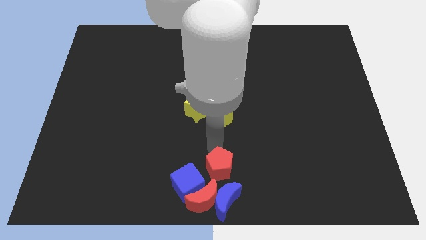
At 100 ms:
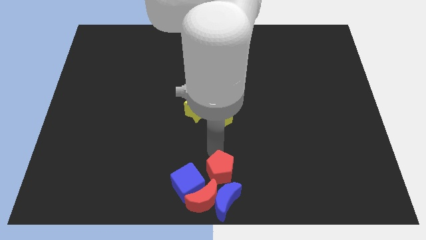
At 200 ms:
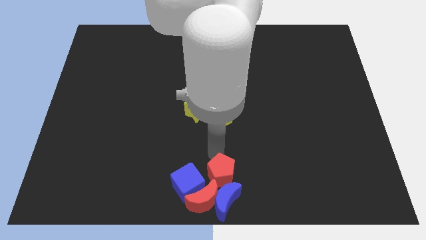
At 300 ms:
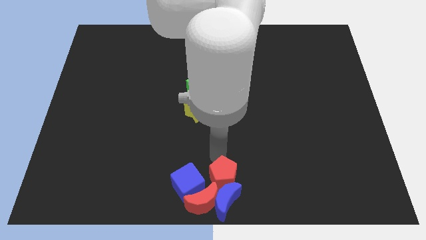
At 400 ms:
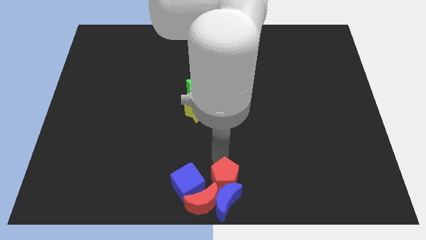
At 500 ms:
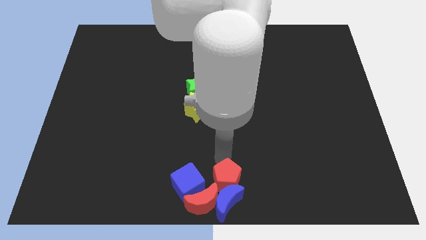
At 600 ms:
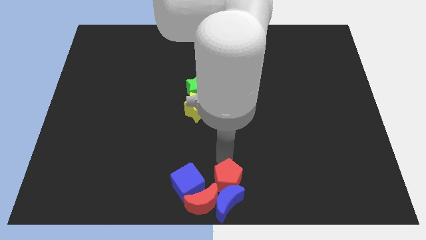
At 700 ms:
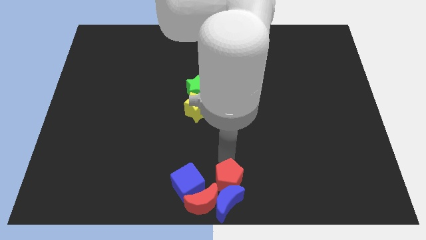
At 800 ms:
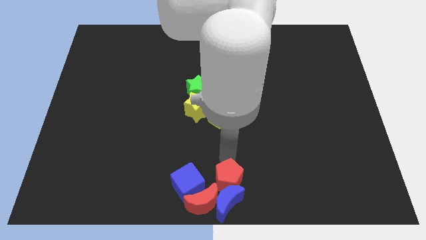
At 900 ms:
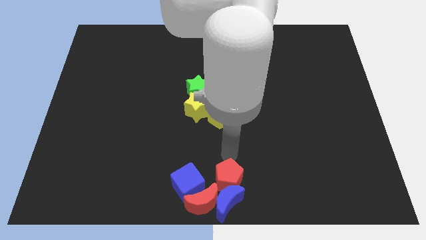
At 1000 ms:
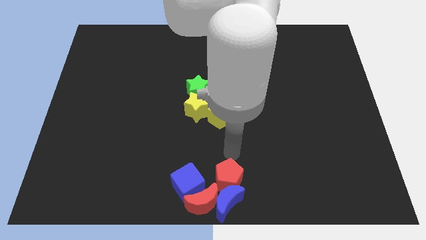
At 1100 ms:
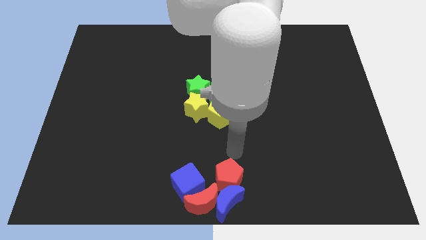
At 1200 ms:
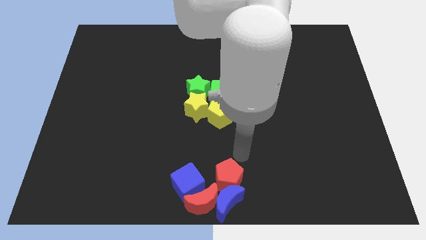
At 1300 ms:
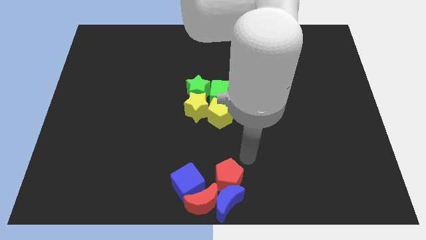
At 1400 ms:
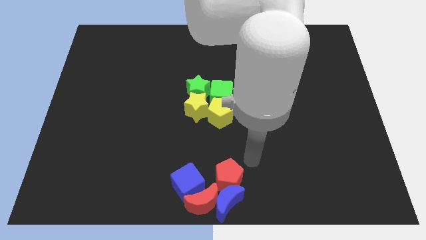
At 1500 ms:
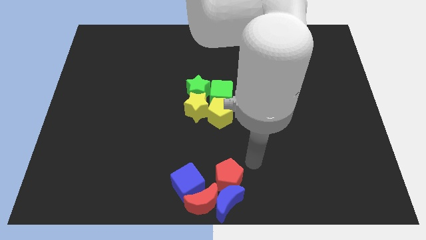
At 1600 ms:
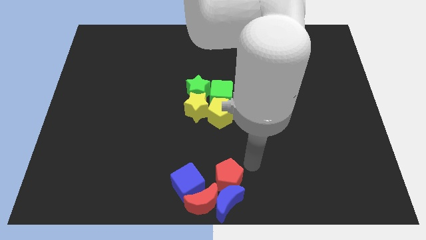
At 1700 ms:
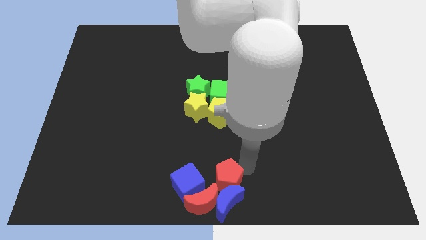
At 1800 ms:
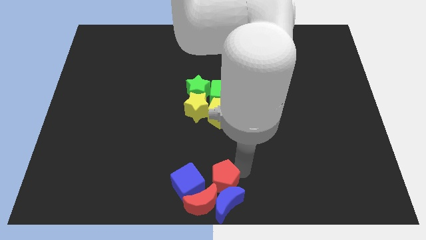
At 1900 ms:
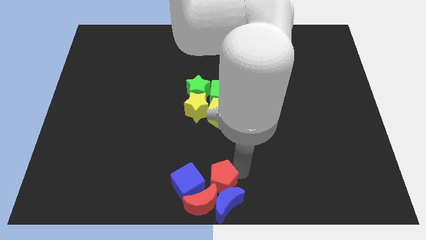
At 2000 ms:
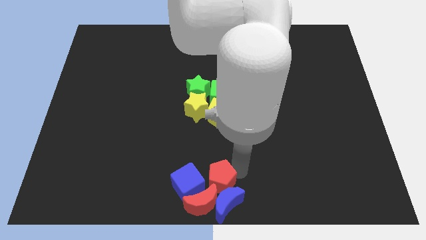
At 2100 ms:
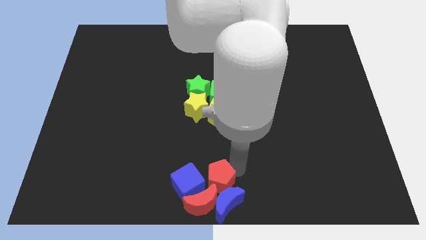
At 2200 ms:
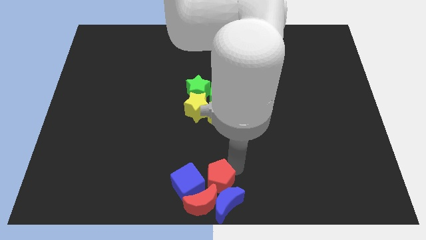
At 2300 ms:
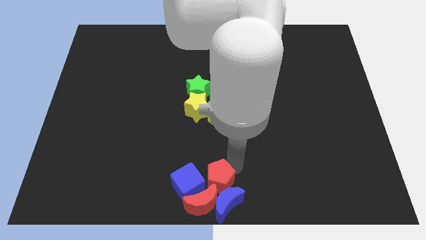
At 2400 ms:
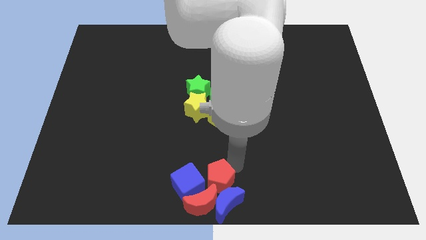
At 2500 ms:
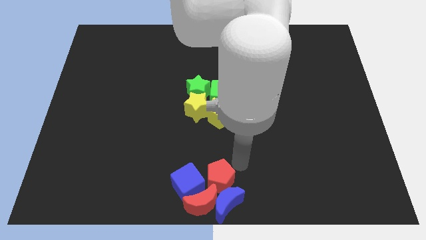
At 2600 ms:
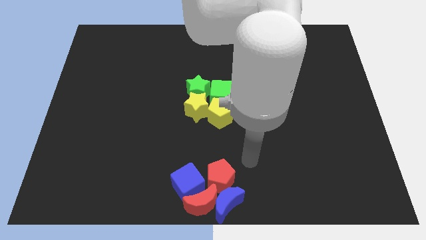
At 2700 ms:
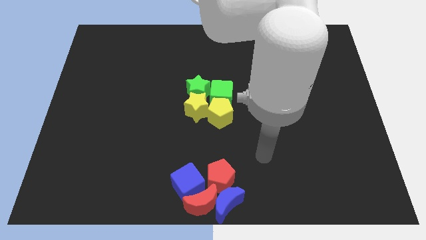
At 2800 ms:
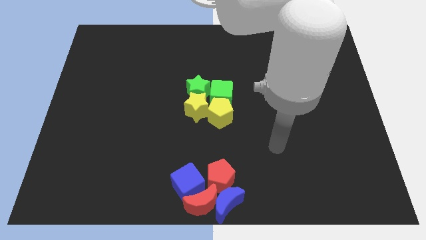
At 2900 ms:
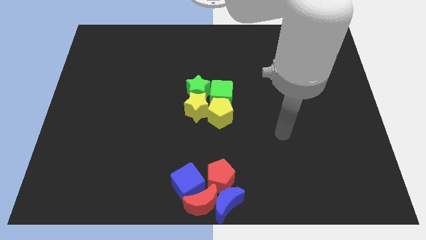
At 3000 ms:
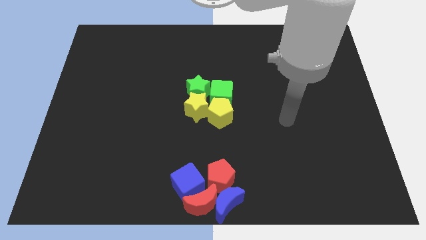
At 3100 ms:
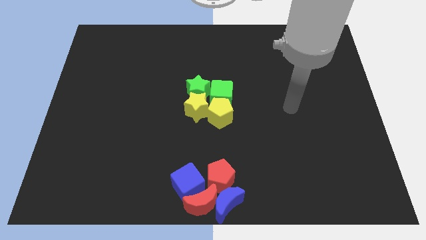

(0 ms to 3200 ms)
move your arm from the red pentagon to the center

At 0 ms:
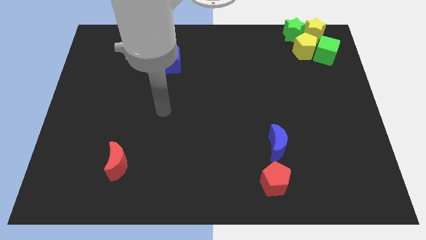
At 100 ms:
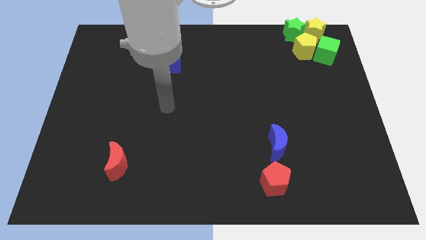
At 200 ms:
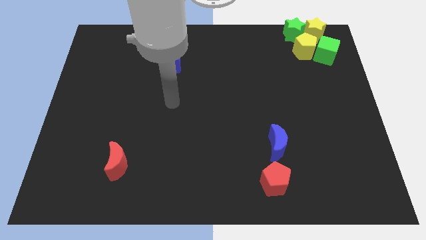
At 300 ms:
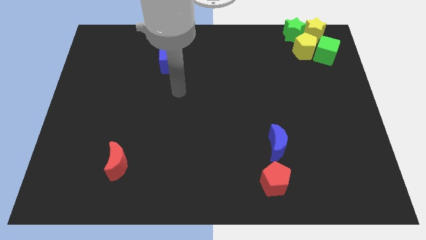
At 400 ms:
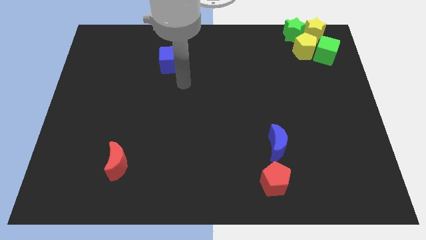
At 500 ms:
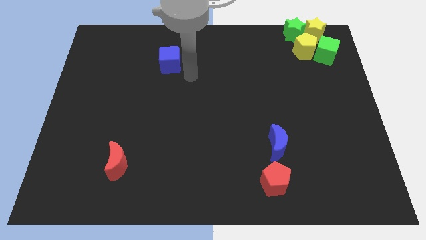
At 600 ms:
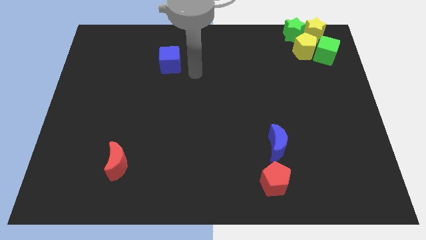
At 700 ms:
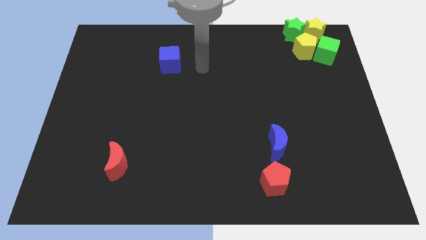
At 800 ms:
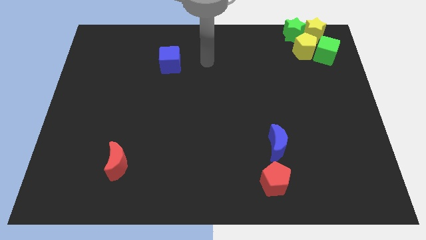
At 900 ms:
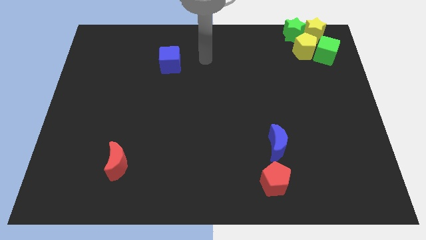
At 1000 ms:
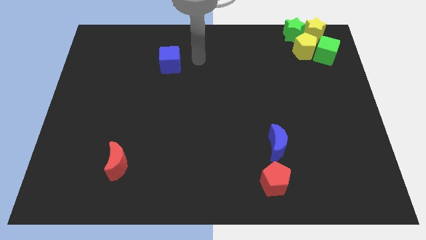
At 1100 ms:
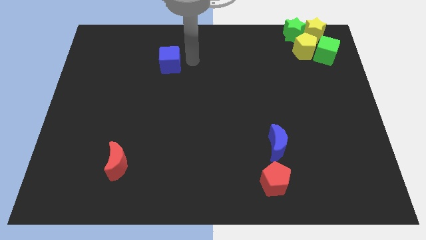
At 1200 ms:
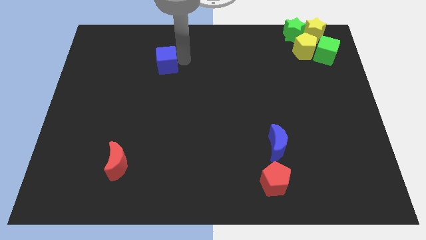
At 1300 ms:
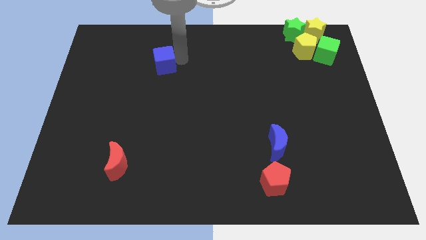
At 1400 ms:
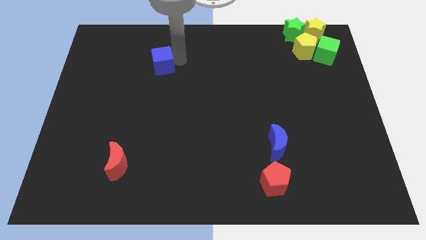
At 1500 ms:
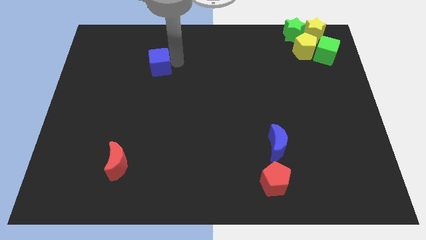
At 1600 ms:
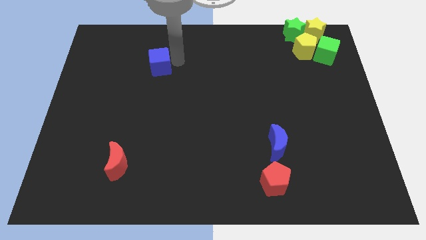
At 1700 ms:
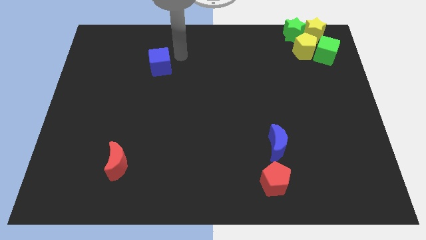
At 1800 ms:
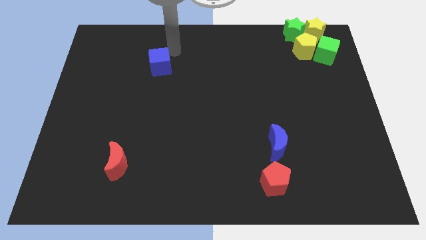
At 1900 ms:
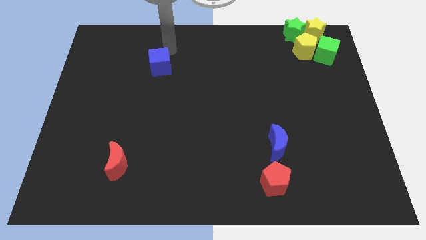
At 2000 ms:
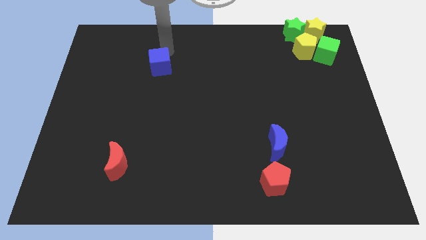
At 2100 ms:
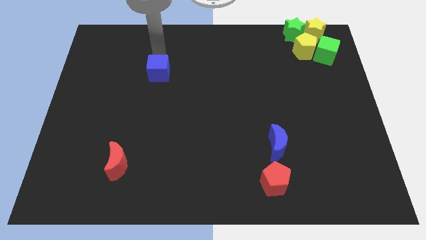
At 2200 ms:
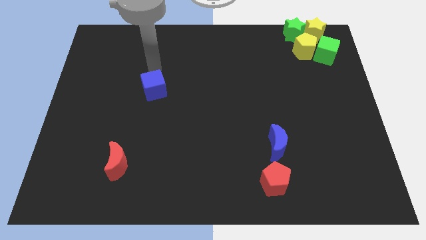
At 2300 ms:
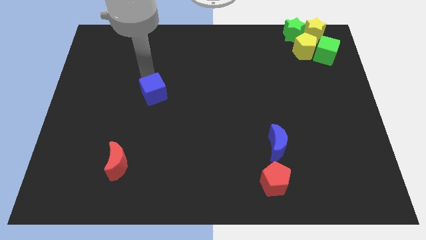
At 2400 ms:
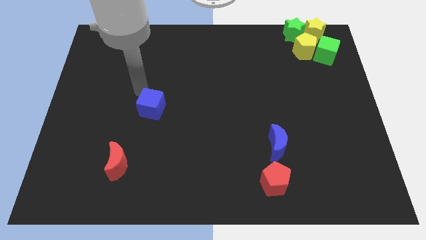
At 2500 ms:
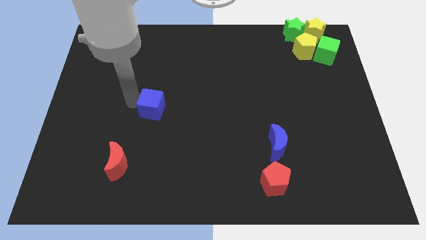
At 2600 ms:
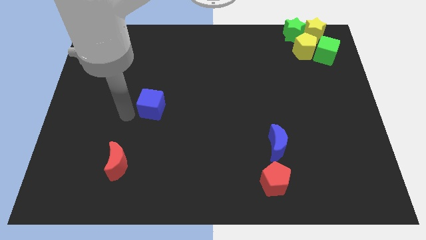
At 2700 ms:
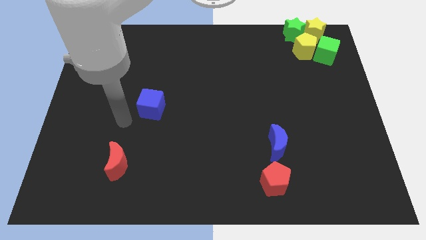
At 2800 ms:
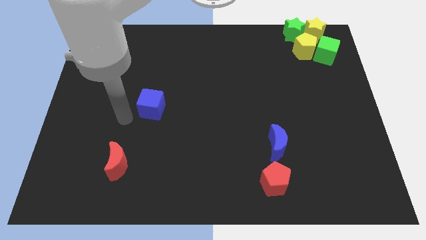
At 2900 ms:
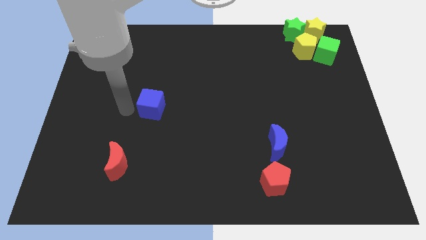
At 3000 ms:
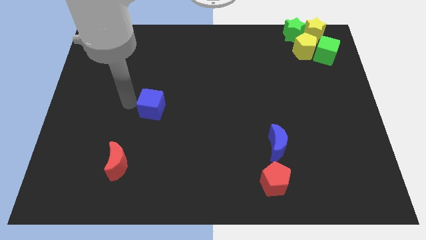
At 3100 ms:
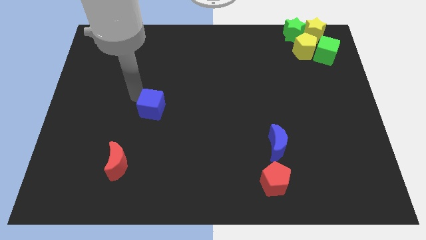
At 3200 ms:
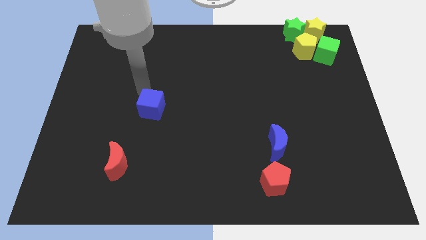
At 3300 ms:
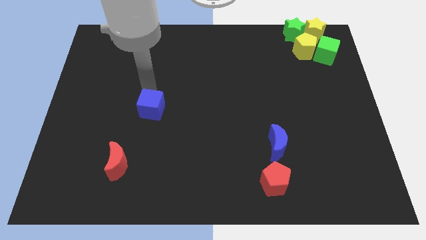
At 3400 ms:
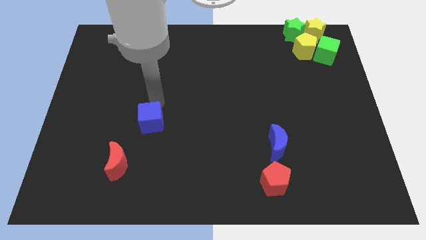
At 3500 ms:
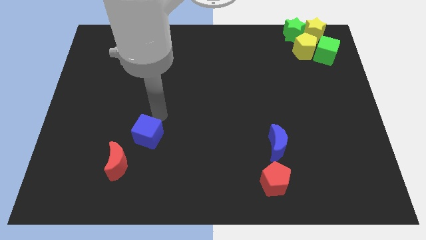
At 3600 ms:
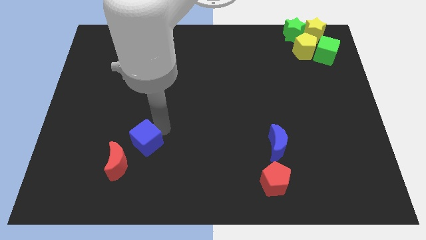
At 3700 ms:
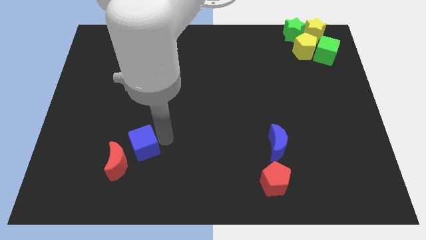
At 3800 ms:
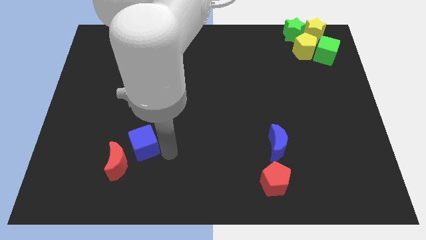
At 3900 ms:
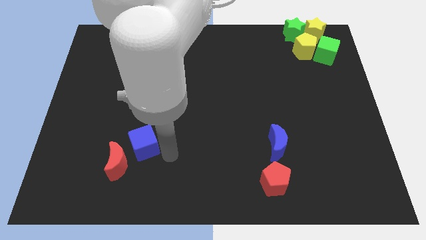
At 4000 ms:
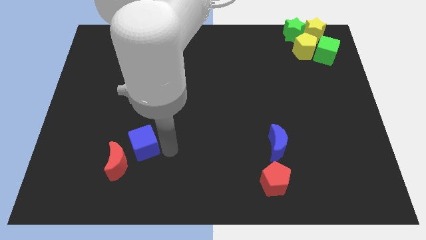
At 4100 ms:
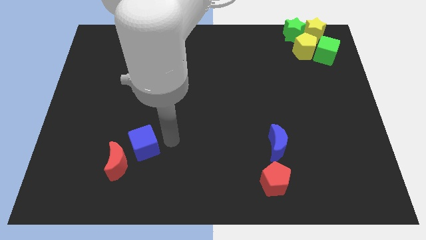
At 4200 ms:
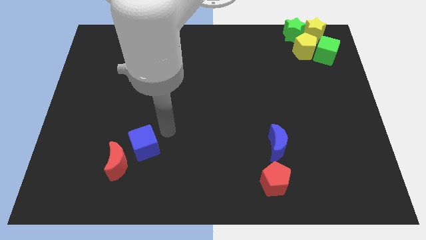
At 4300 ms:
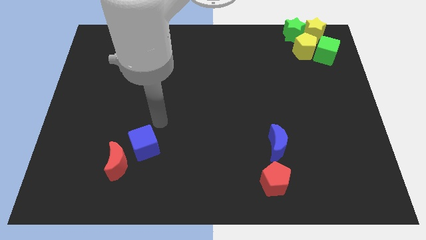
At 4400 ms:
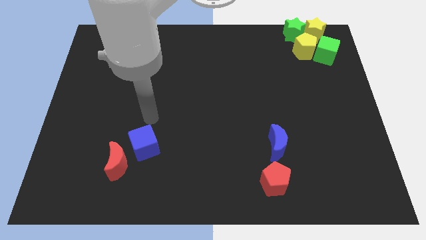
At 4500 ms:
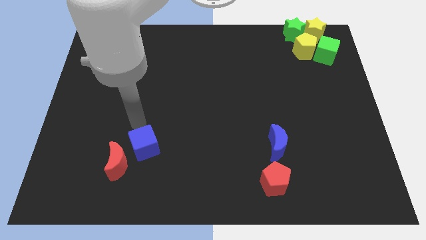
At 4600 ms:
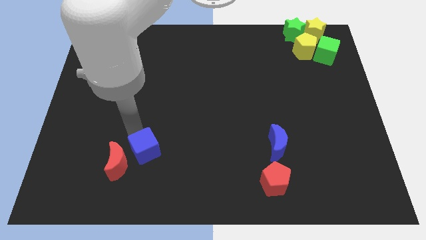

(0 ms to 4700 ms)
push blue cube beside red crescent

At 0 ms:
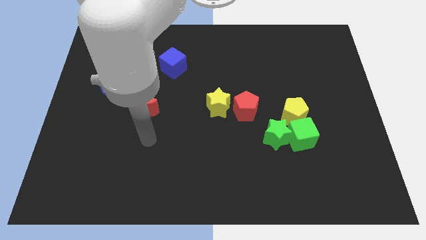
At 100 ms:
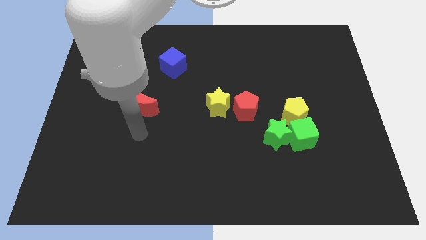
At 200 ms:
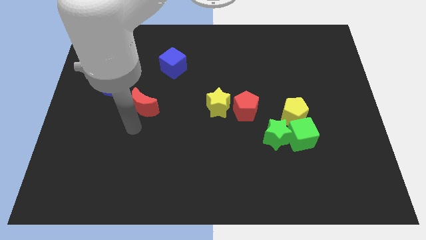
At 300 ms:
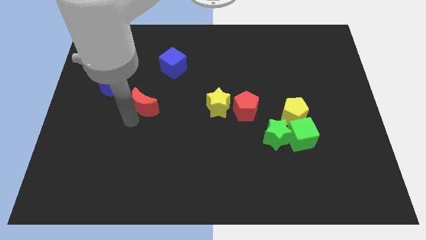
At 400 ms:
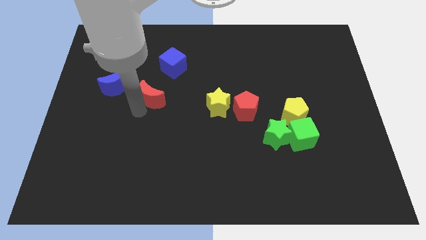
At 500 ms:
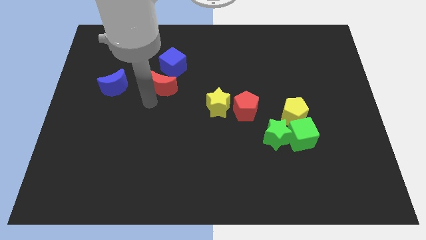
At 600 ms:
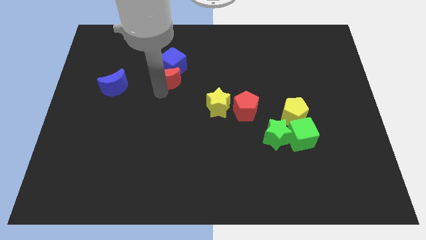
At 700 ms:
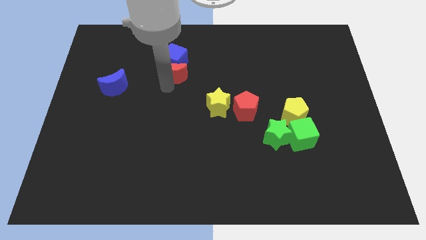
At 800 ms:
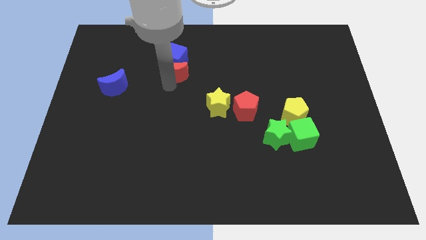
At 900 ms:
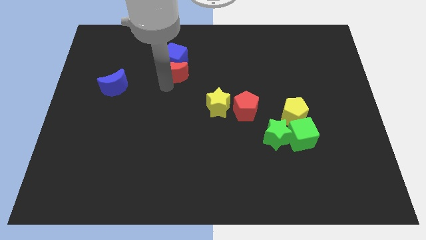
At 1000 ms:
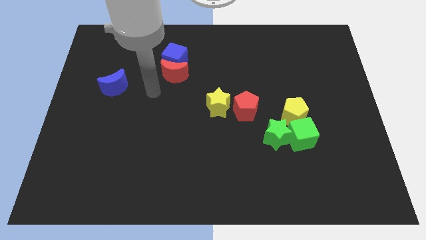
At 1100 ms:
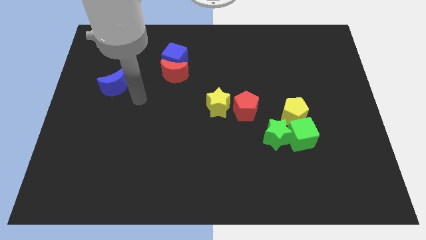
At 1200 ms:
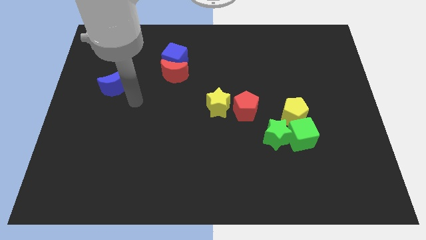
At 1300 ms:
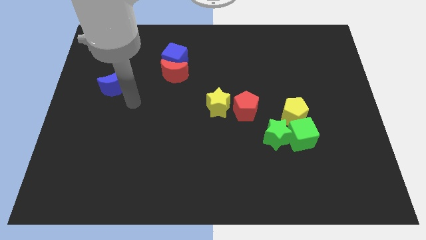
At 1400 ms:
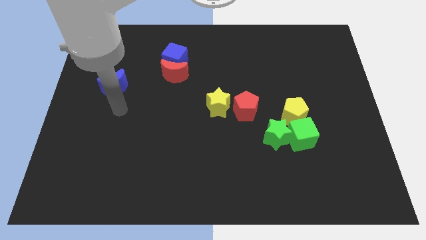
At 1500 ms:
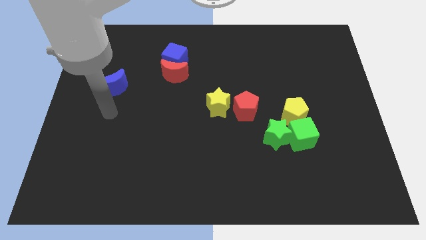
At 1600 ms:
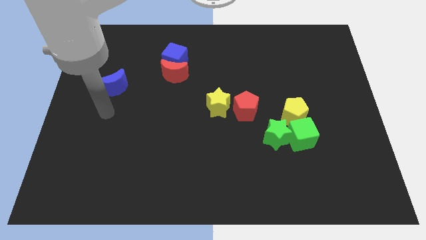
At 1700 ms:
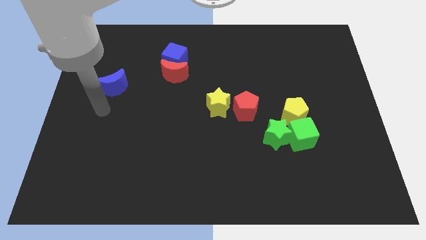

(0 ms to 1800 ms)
push the red moon into a blue cube
